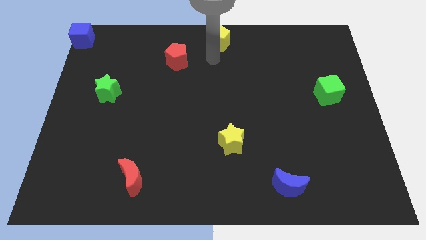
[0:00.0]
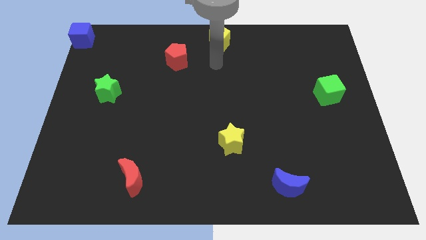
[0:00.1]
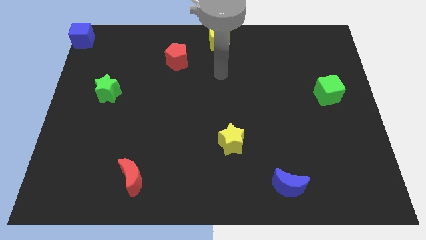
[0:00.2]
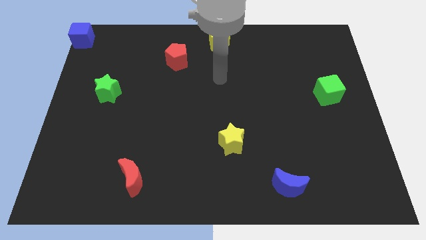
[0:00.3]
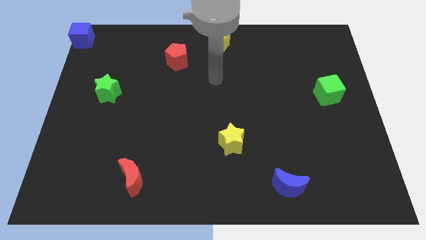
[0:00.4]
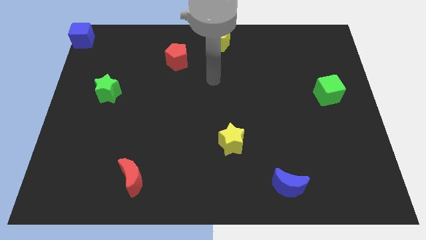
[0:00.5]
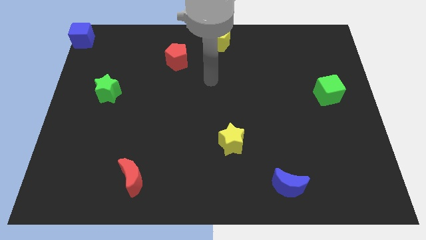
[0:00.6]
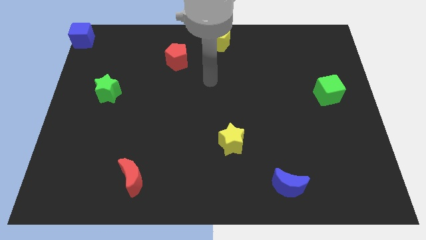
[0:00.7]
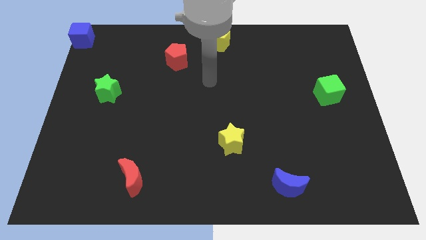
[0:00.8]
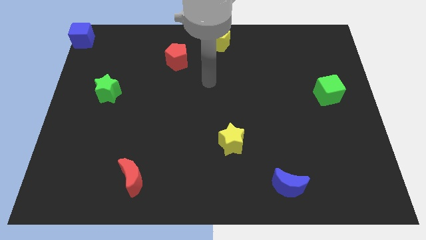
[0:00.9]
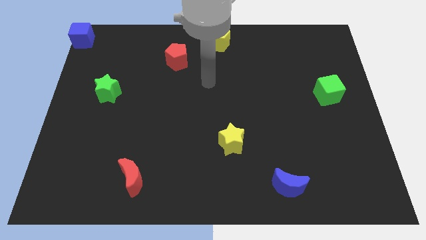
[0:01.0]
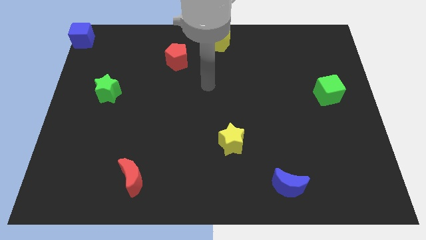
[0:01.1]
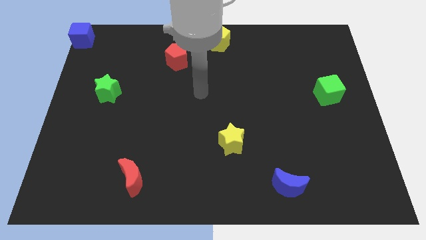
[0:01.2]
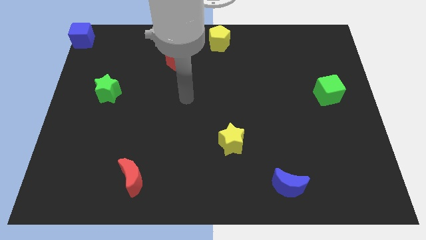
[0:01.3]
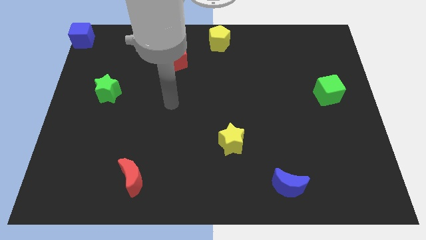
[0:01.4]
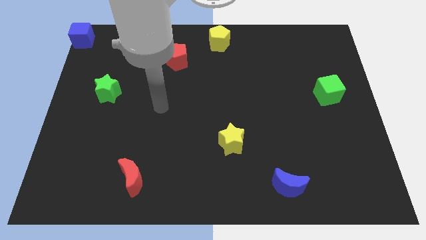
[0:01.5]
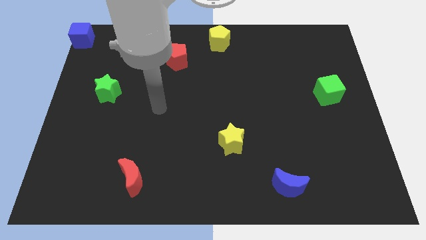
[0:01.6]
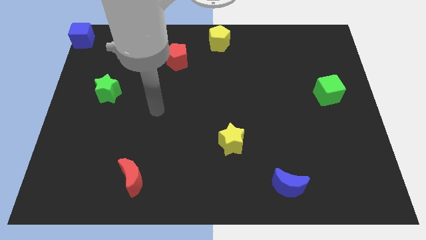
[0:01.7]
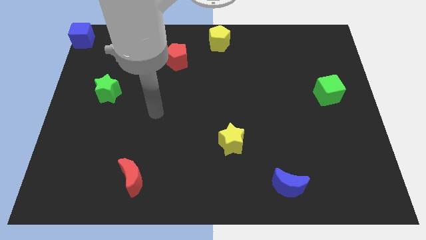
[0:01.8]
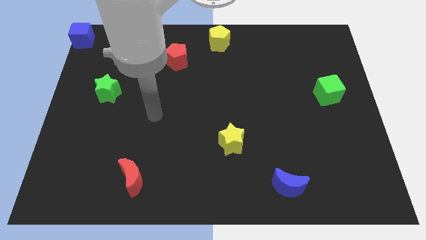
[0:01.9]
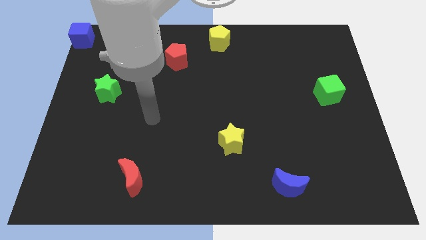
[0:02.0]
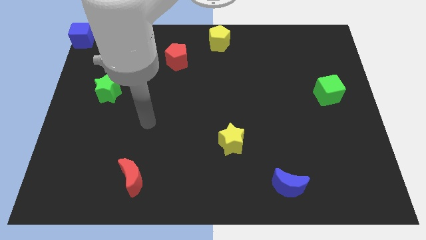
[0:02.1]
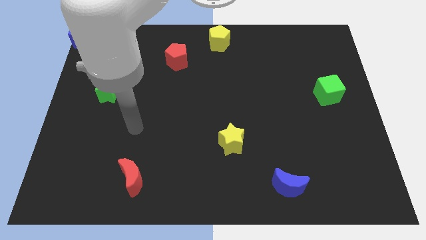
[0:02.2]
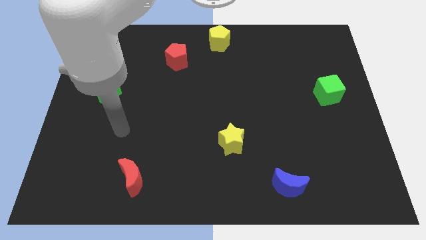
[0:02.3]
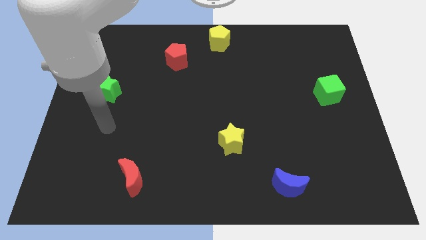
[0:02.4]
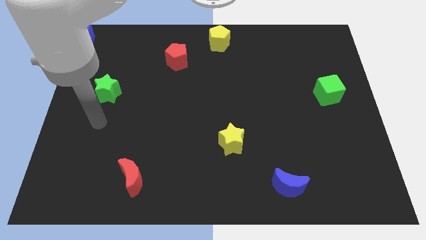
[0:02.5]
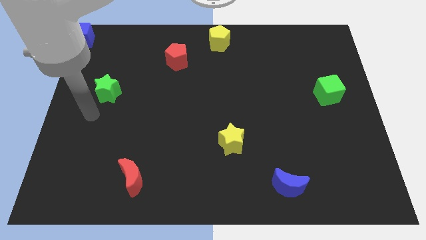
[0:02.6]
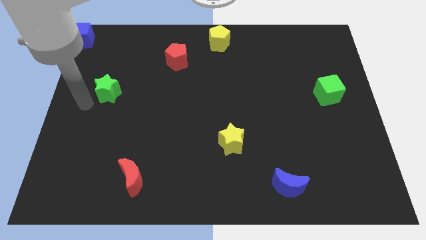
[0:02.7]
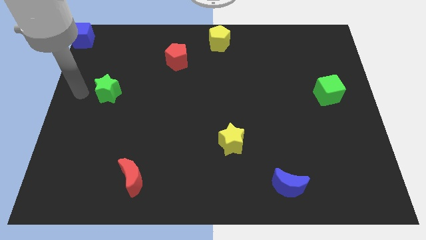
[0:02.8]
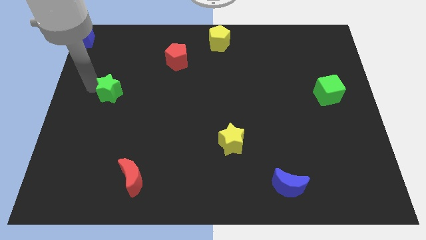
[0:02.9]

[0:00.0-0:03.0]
place your arm to the left side of green star

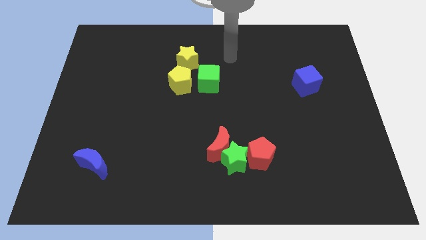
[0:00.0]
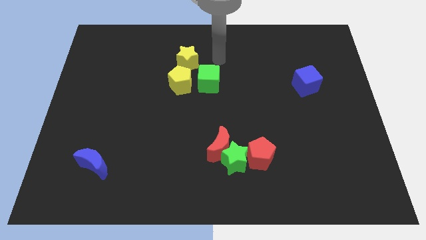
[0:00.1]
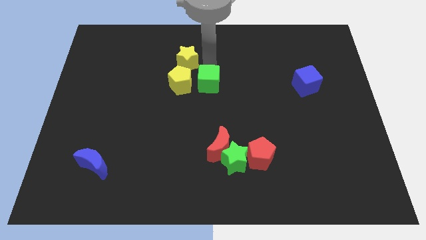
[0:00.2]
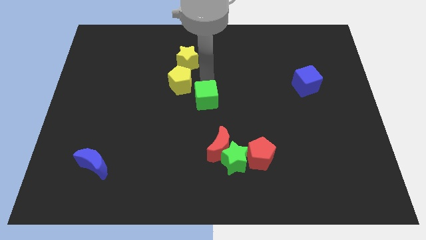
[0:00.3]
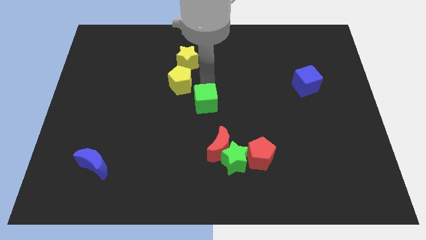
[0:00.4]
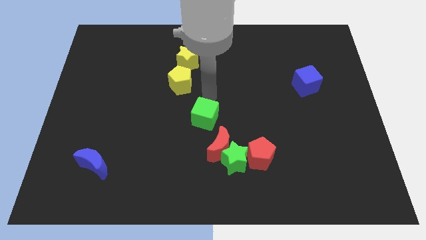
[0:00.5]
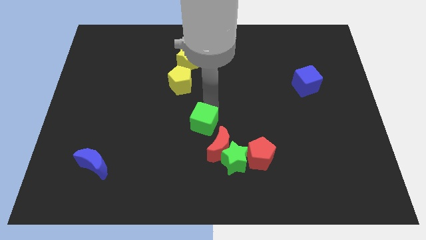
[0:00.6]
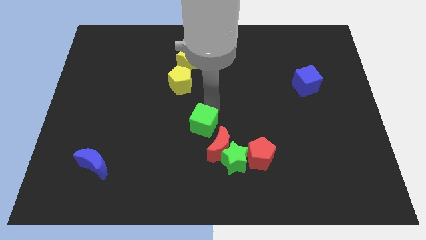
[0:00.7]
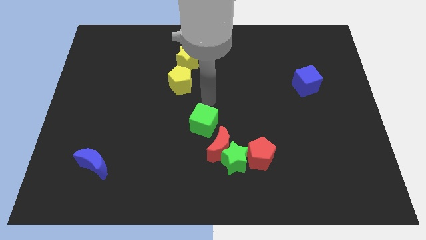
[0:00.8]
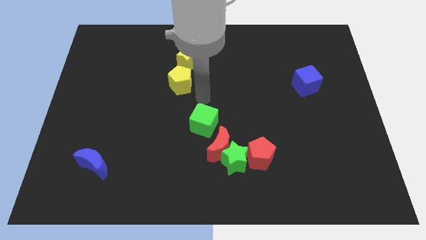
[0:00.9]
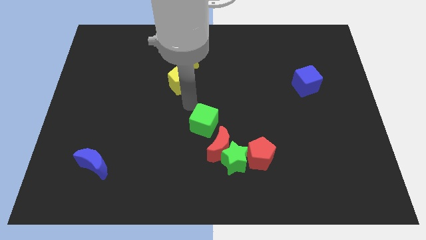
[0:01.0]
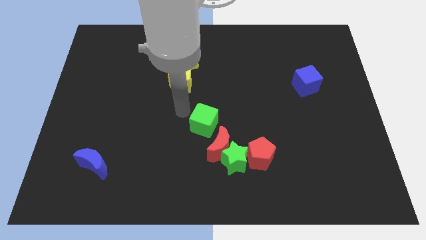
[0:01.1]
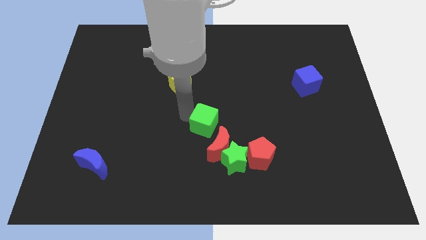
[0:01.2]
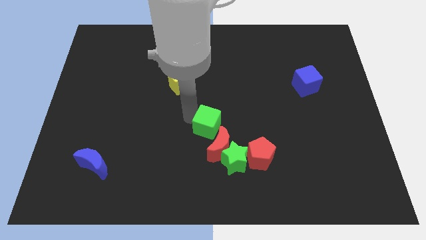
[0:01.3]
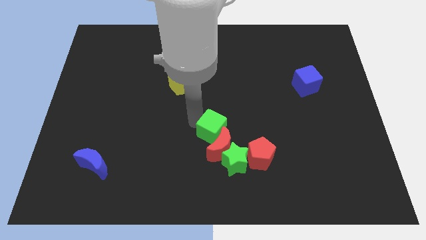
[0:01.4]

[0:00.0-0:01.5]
push the green cube into red crescent

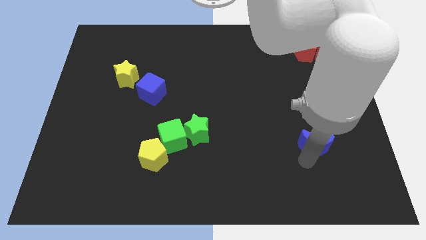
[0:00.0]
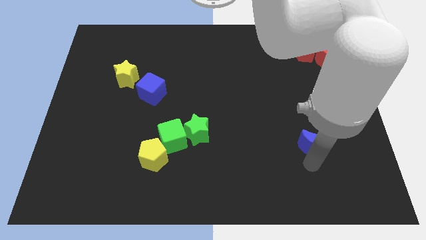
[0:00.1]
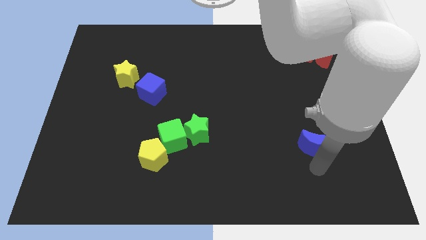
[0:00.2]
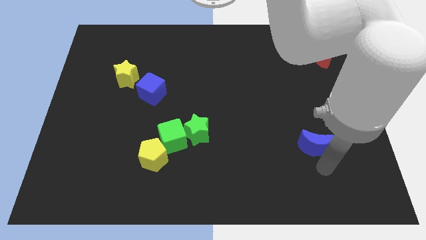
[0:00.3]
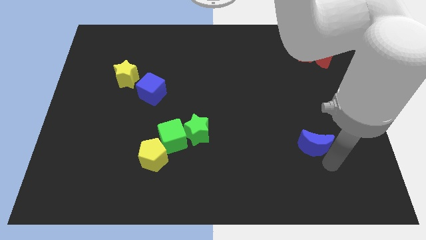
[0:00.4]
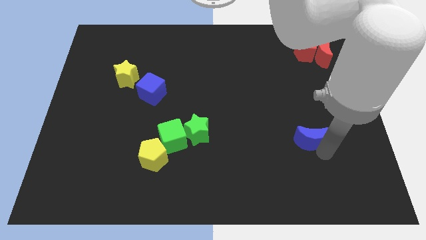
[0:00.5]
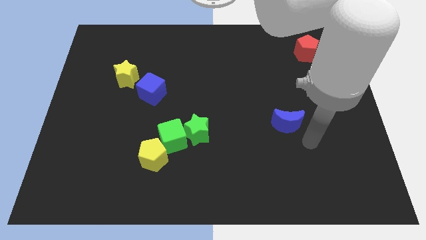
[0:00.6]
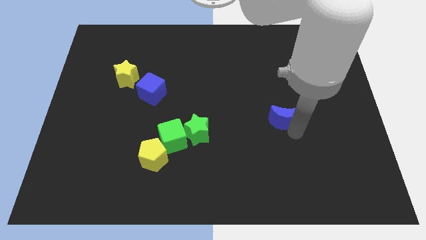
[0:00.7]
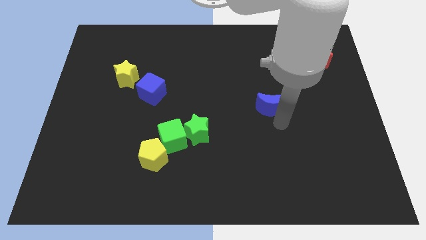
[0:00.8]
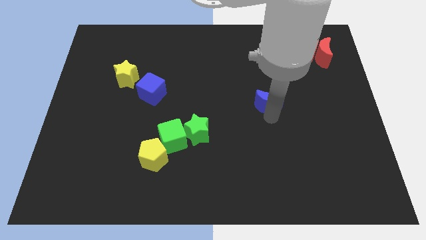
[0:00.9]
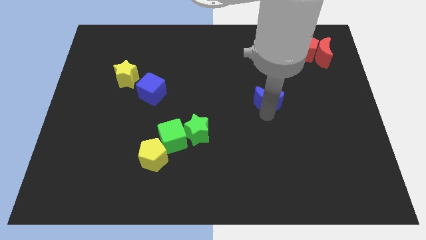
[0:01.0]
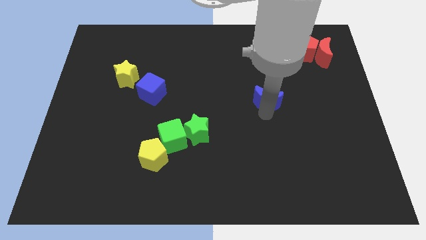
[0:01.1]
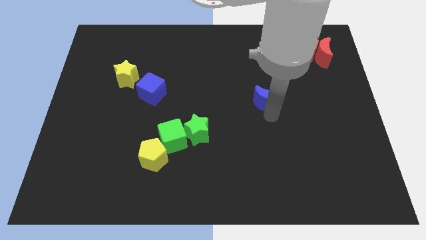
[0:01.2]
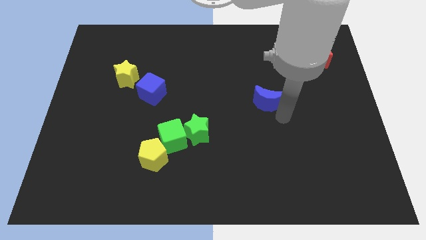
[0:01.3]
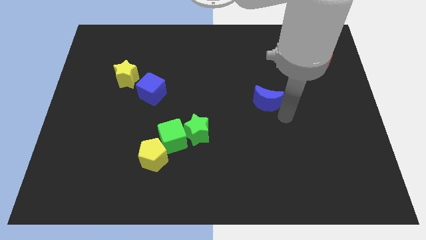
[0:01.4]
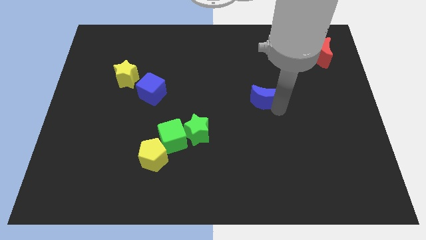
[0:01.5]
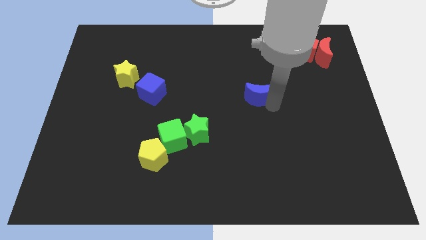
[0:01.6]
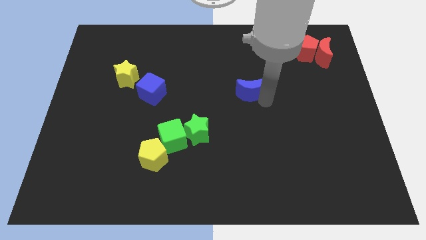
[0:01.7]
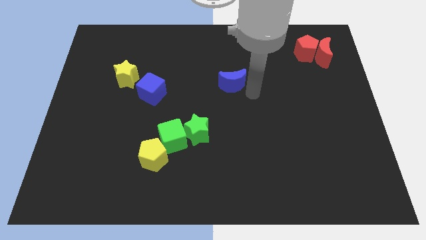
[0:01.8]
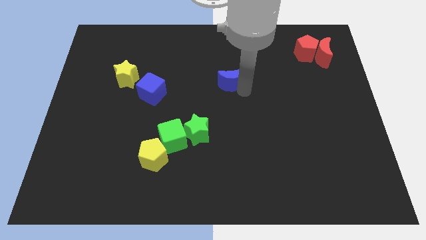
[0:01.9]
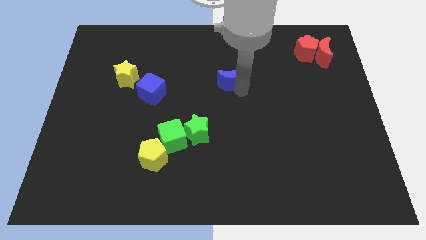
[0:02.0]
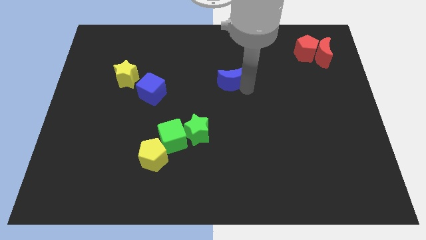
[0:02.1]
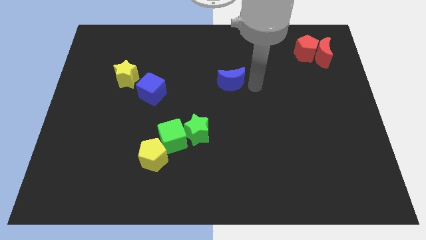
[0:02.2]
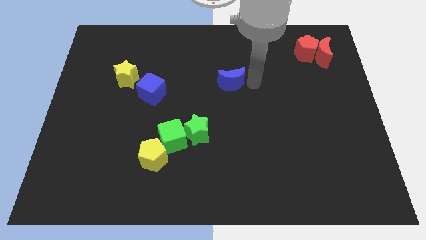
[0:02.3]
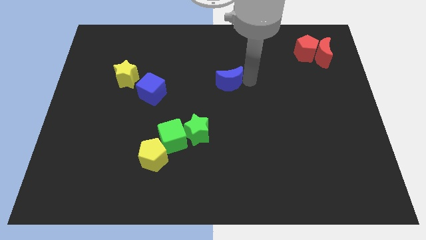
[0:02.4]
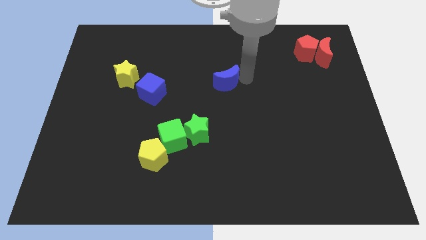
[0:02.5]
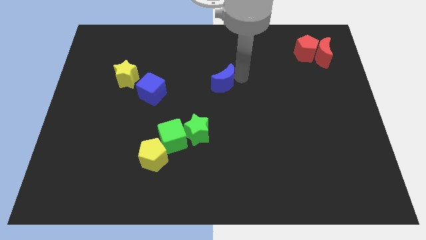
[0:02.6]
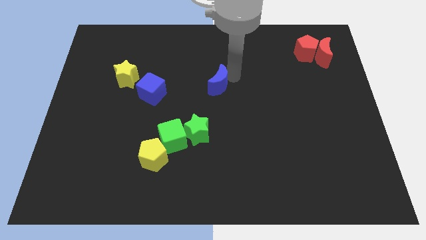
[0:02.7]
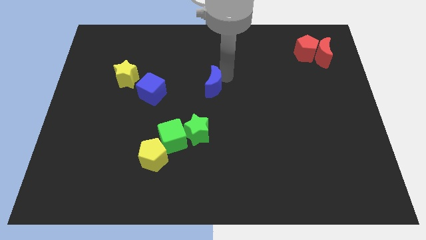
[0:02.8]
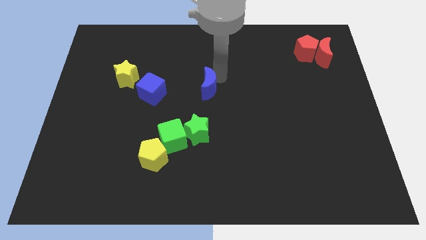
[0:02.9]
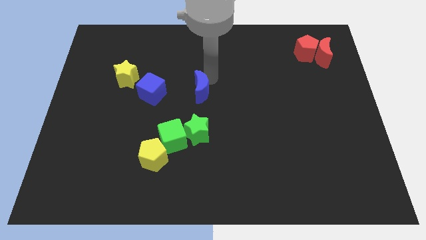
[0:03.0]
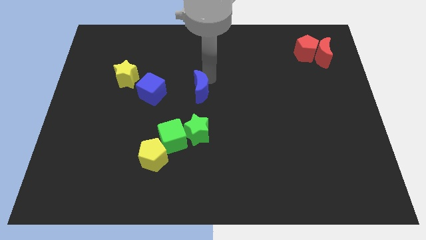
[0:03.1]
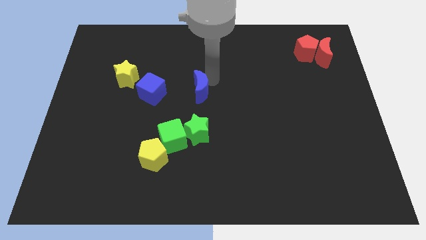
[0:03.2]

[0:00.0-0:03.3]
place the blue moon above the green star

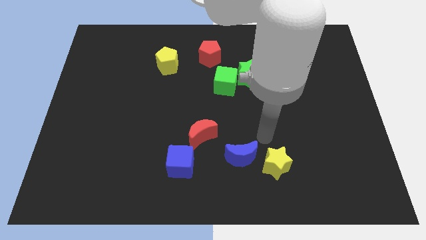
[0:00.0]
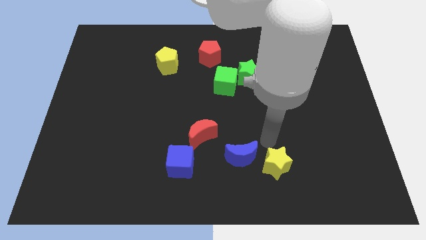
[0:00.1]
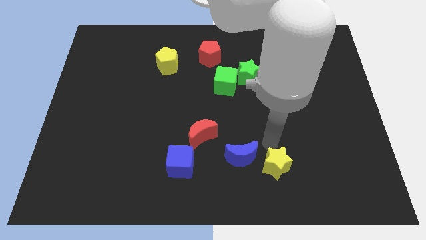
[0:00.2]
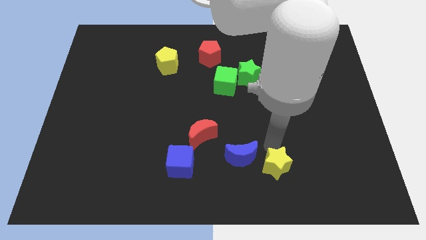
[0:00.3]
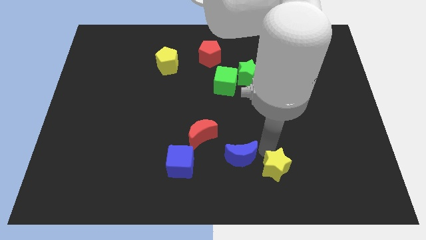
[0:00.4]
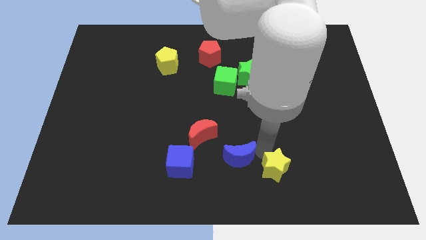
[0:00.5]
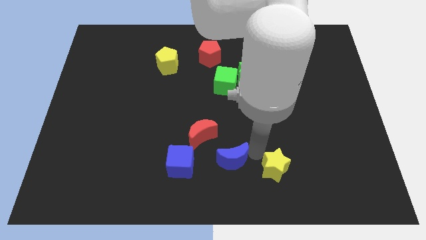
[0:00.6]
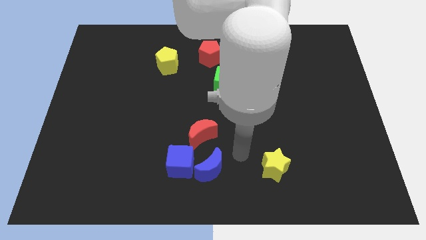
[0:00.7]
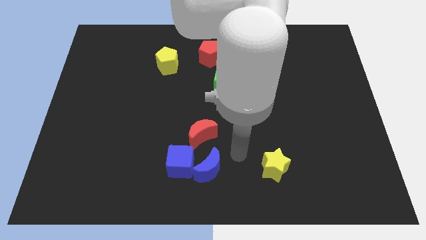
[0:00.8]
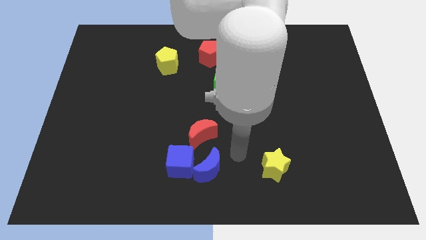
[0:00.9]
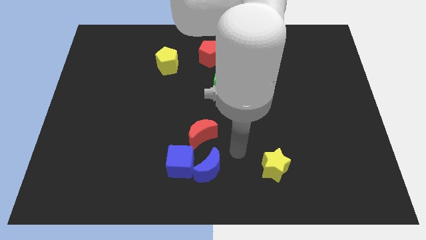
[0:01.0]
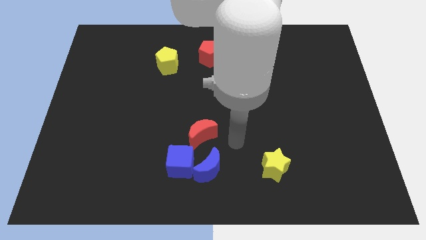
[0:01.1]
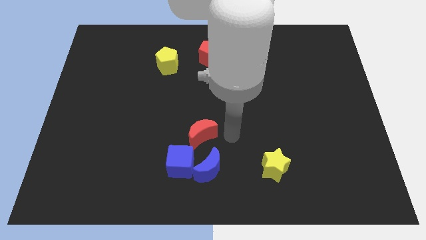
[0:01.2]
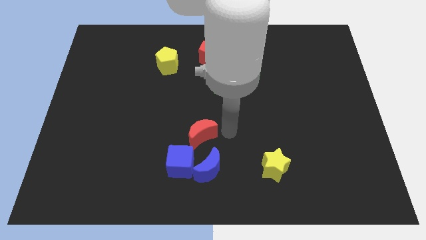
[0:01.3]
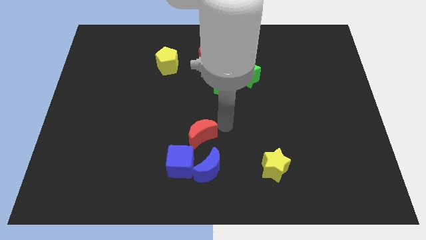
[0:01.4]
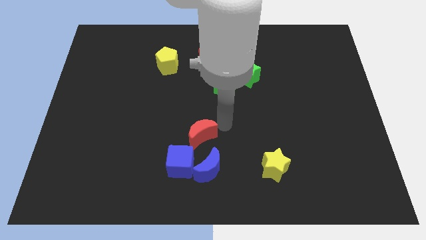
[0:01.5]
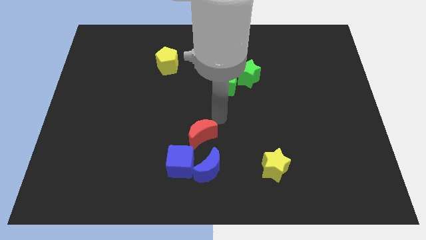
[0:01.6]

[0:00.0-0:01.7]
move the blue moon vertically below the red moon
